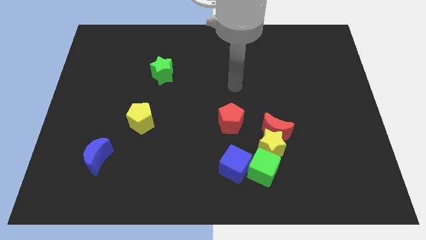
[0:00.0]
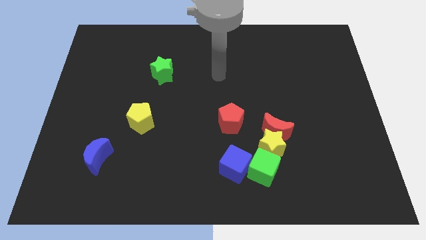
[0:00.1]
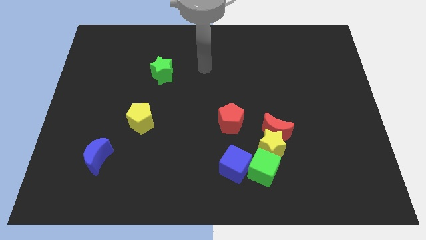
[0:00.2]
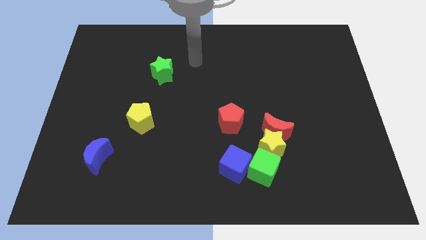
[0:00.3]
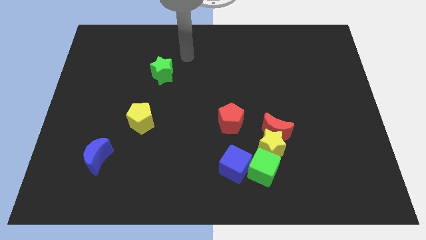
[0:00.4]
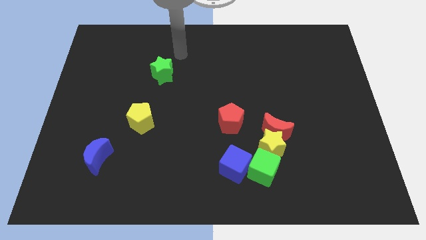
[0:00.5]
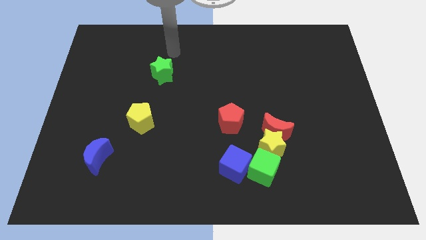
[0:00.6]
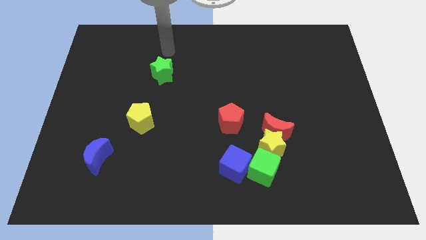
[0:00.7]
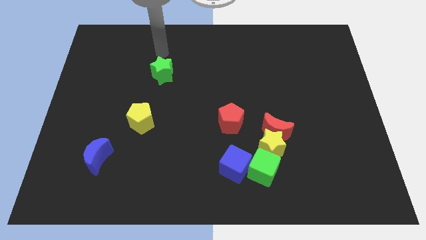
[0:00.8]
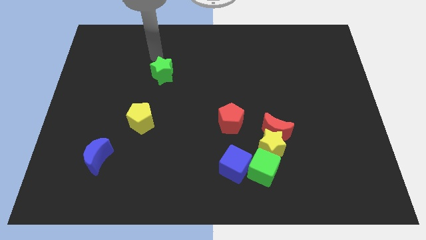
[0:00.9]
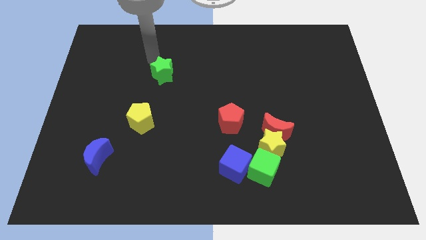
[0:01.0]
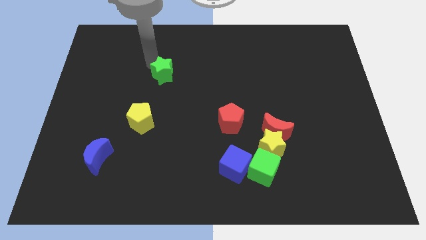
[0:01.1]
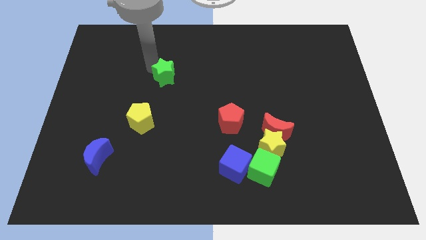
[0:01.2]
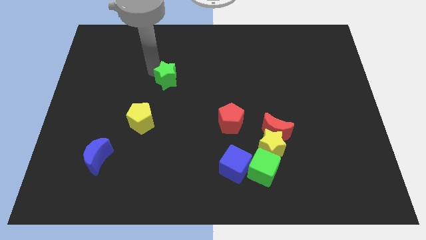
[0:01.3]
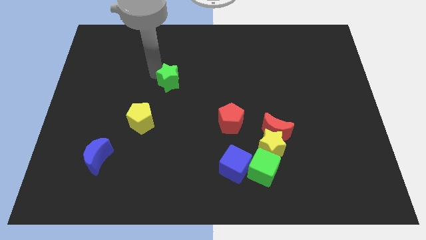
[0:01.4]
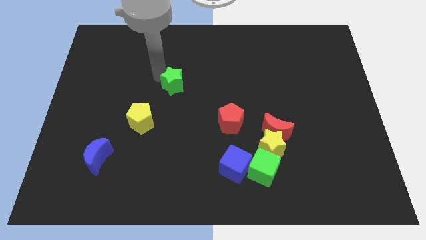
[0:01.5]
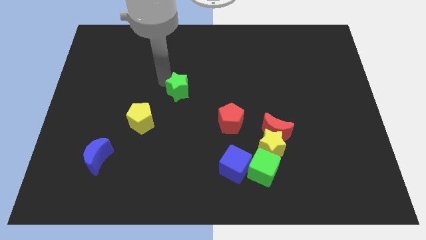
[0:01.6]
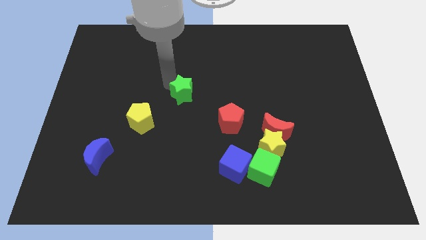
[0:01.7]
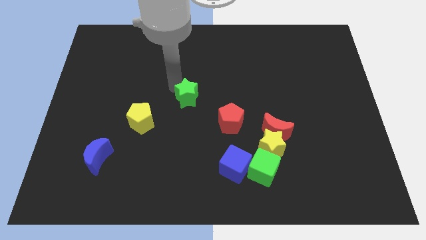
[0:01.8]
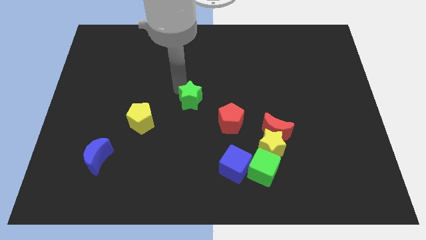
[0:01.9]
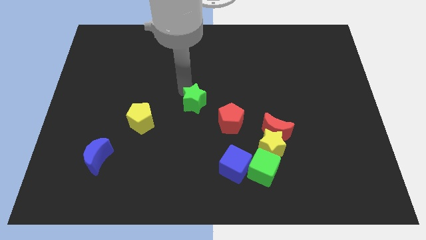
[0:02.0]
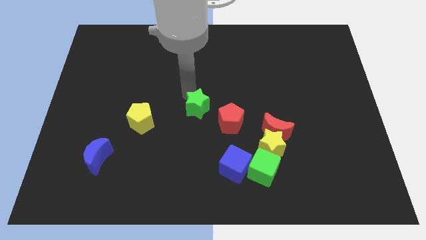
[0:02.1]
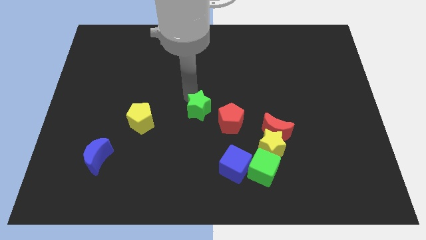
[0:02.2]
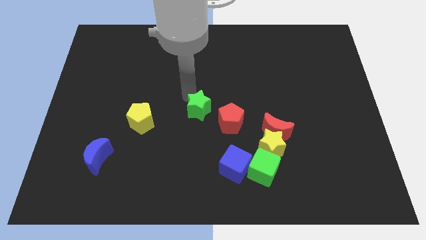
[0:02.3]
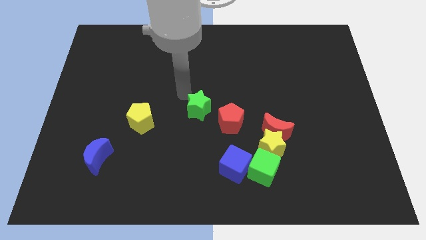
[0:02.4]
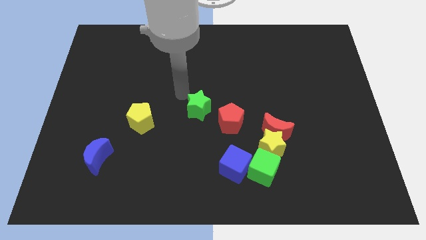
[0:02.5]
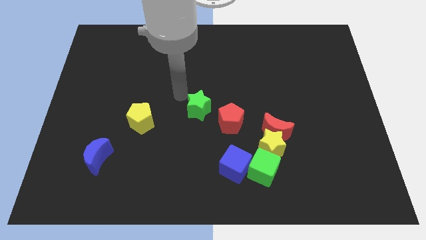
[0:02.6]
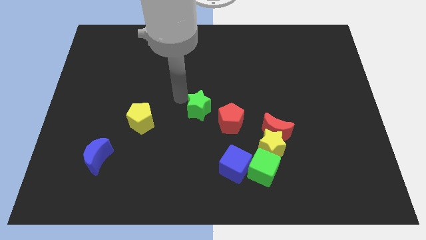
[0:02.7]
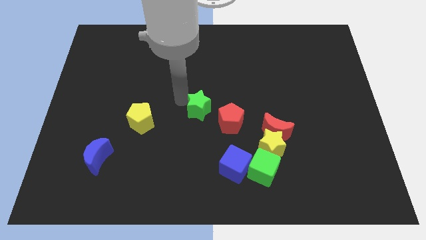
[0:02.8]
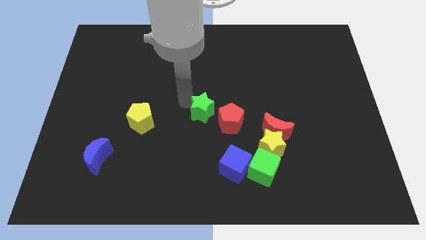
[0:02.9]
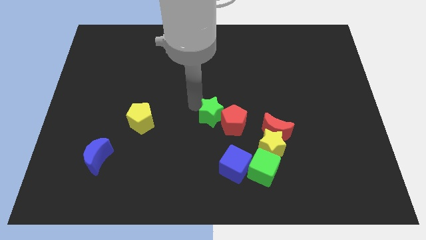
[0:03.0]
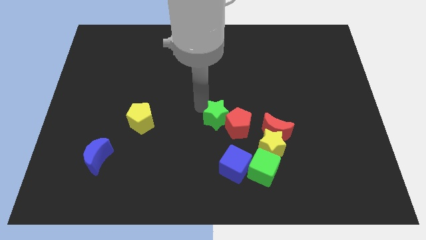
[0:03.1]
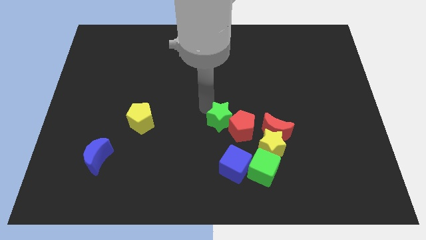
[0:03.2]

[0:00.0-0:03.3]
push the green star towards the red pentagon

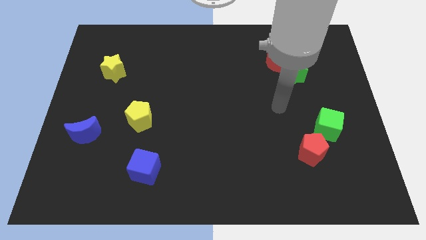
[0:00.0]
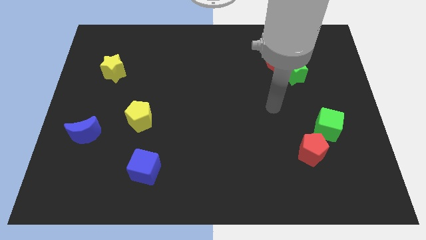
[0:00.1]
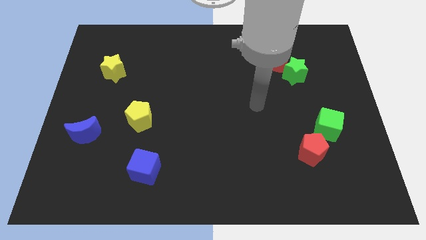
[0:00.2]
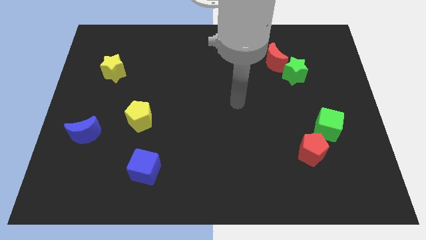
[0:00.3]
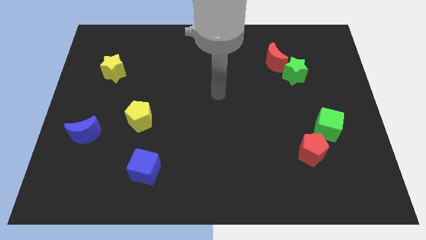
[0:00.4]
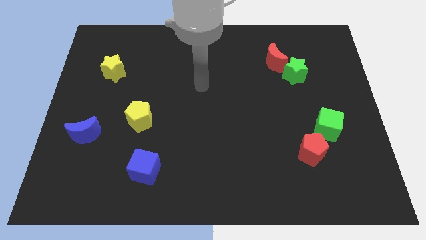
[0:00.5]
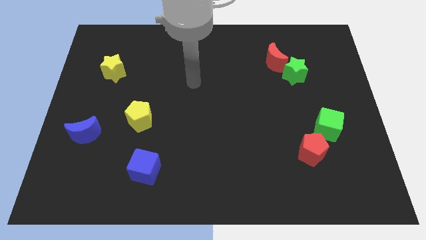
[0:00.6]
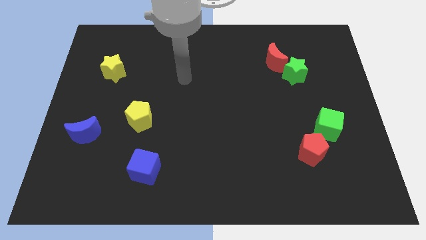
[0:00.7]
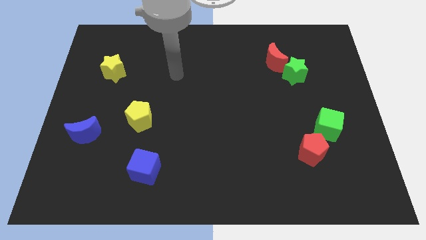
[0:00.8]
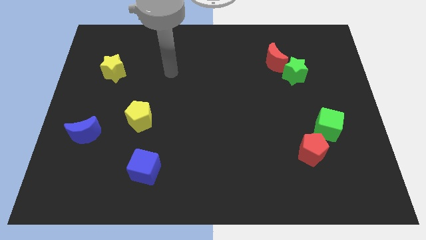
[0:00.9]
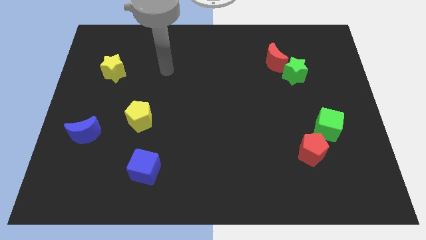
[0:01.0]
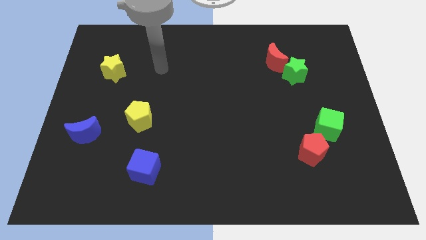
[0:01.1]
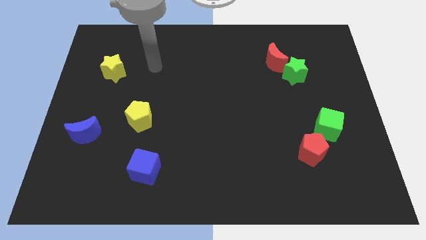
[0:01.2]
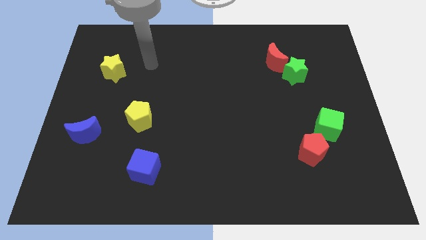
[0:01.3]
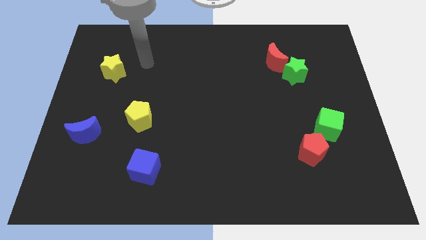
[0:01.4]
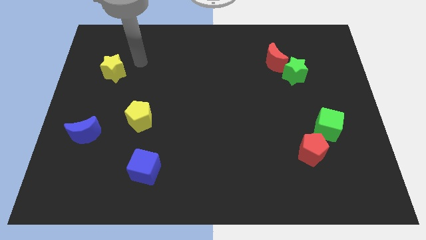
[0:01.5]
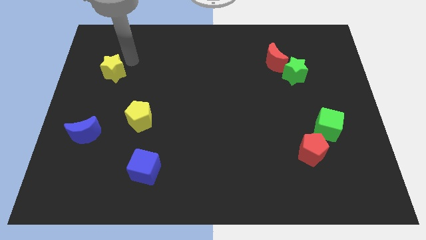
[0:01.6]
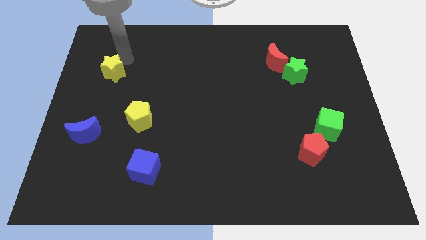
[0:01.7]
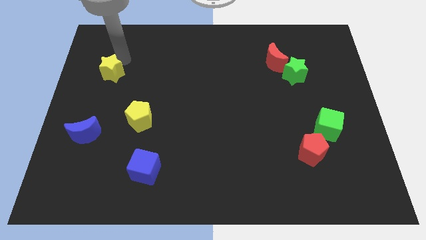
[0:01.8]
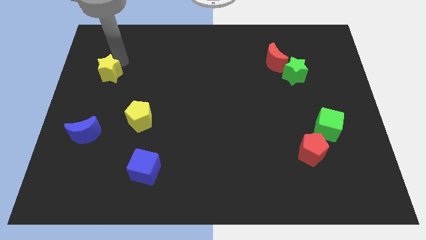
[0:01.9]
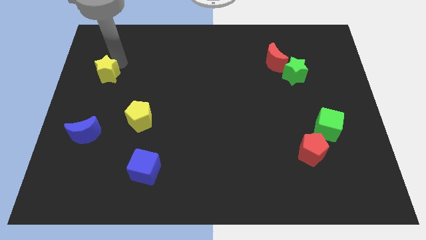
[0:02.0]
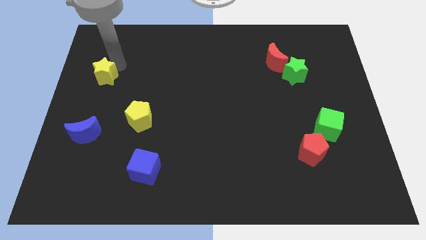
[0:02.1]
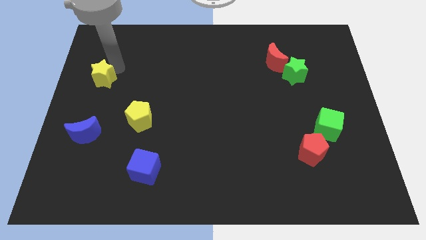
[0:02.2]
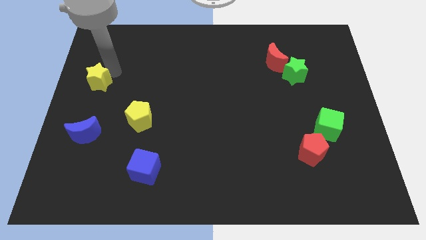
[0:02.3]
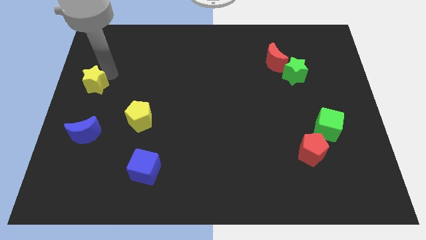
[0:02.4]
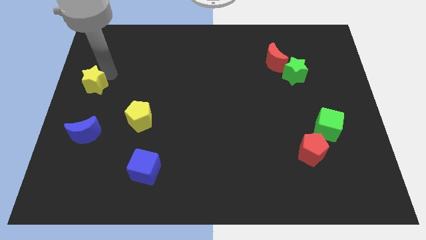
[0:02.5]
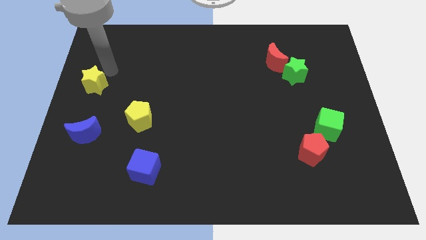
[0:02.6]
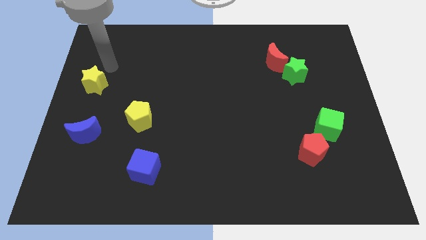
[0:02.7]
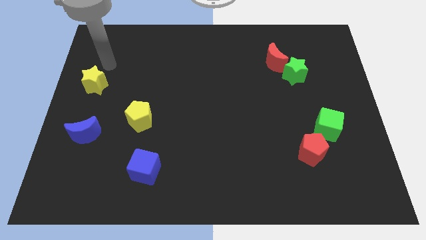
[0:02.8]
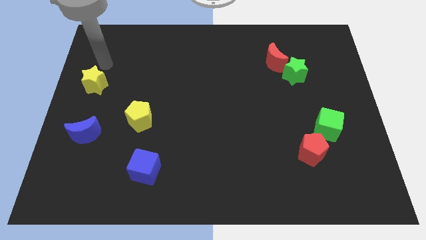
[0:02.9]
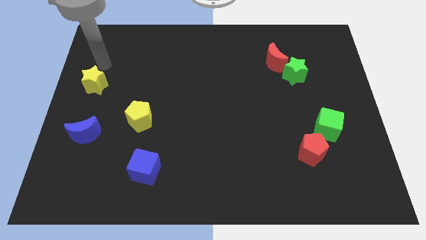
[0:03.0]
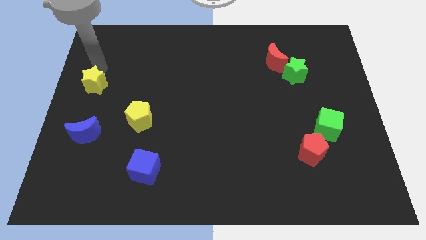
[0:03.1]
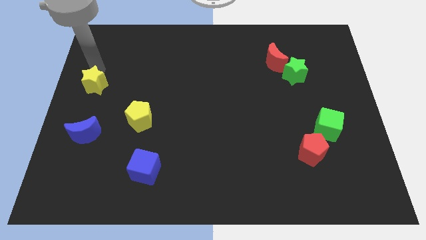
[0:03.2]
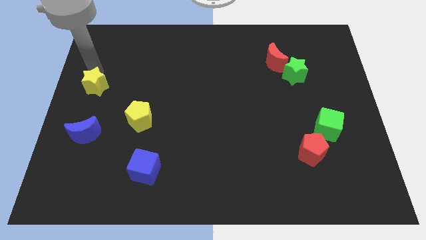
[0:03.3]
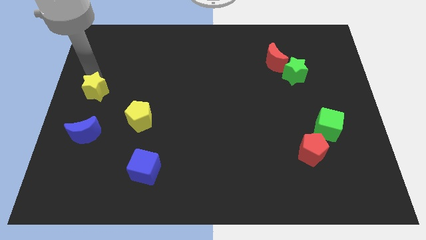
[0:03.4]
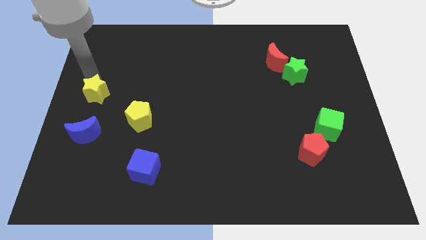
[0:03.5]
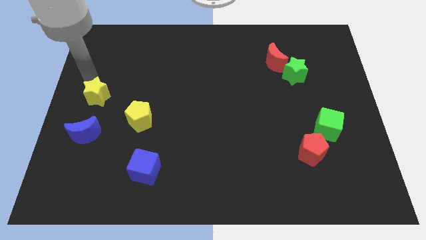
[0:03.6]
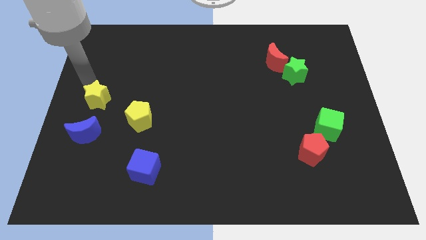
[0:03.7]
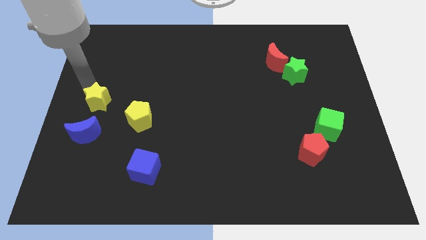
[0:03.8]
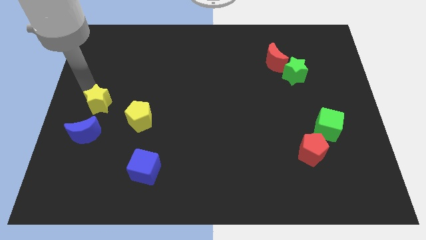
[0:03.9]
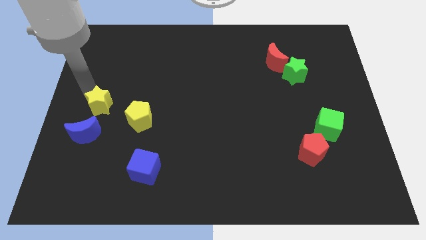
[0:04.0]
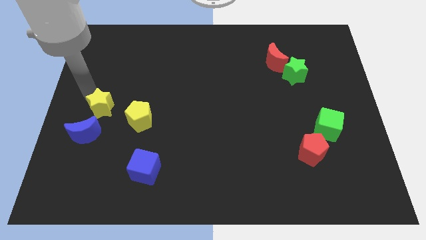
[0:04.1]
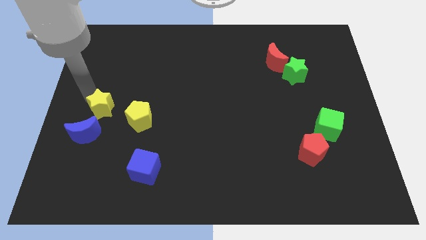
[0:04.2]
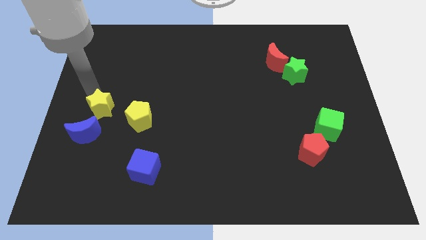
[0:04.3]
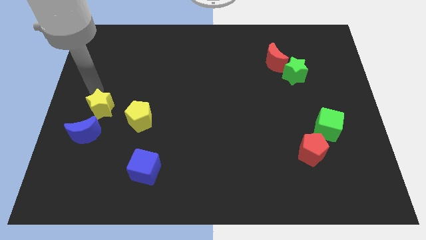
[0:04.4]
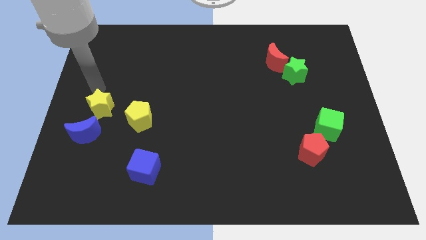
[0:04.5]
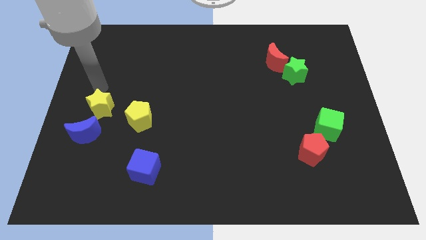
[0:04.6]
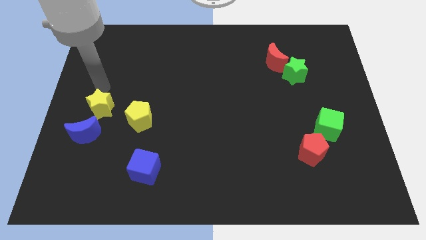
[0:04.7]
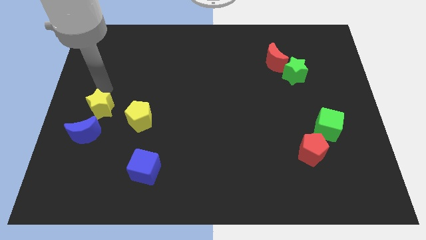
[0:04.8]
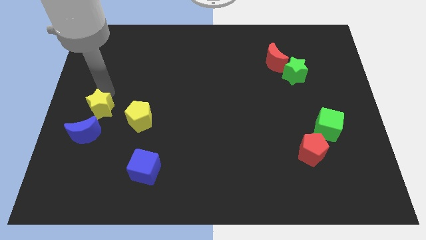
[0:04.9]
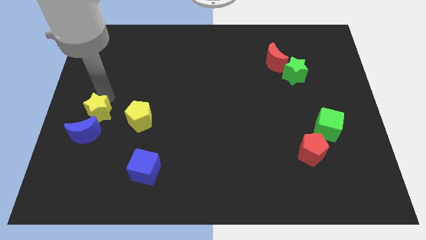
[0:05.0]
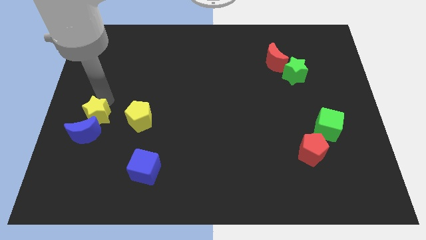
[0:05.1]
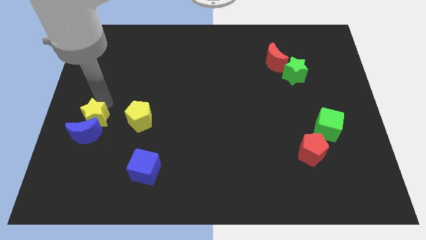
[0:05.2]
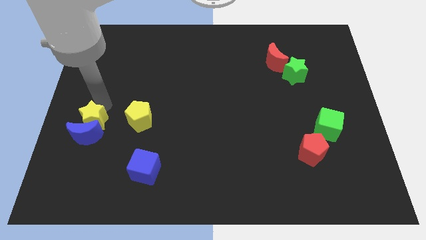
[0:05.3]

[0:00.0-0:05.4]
push the yellow star towards the blue moon
